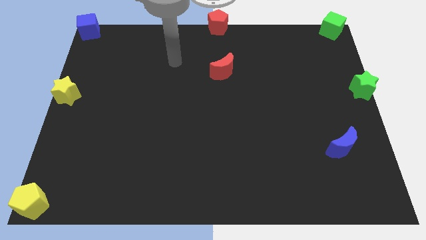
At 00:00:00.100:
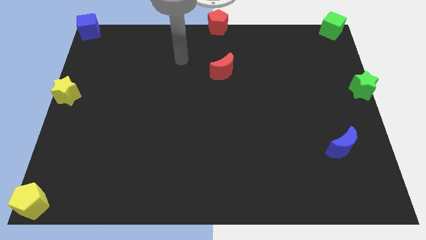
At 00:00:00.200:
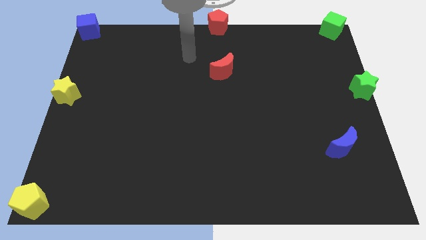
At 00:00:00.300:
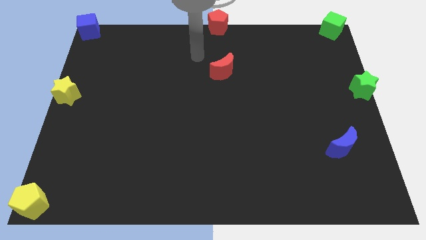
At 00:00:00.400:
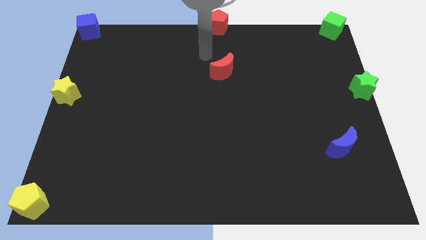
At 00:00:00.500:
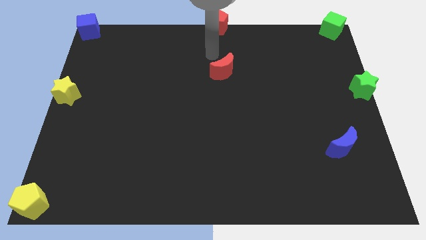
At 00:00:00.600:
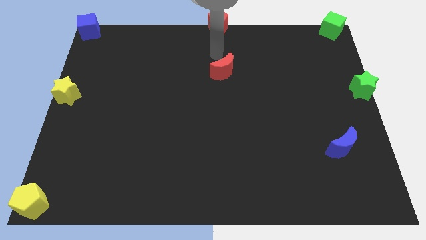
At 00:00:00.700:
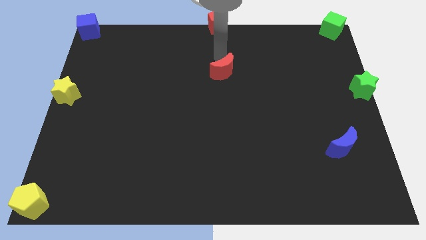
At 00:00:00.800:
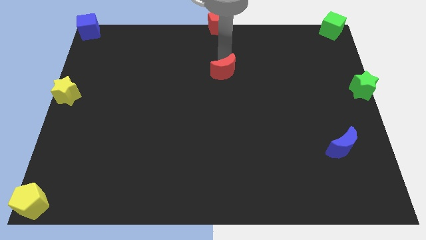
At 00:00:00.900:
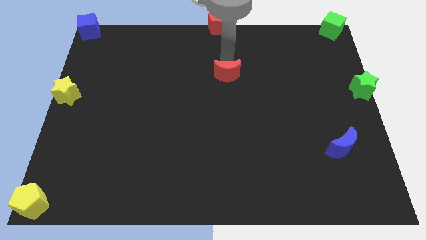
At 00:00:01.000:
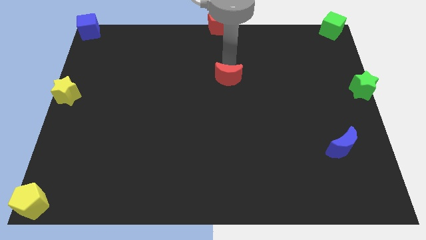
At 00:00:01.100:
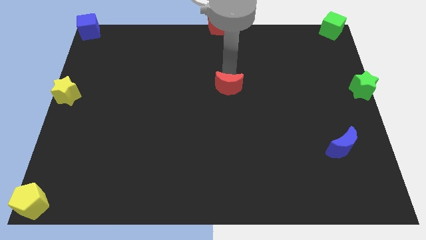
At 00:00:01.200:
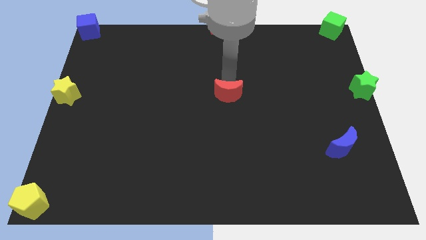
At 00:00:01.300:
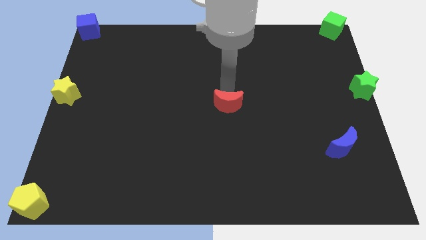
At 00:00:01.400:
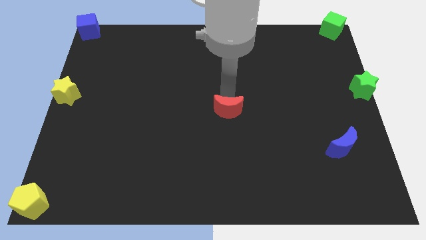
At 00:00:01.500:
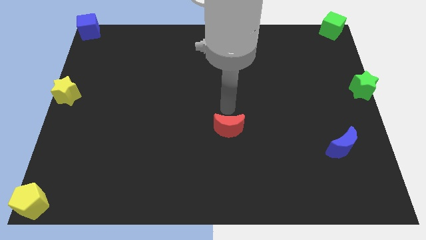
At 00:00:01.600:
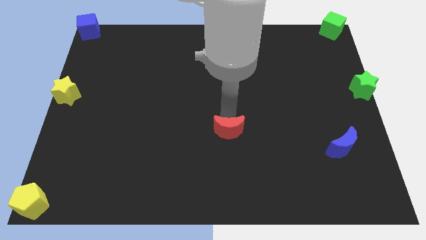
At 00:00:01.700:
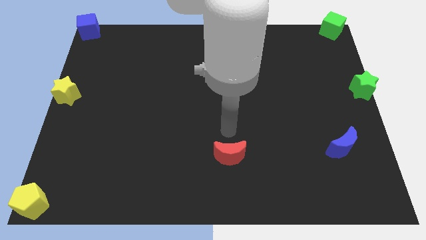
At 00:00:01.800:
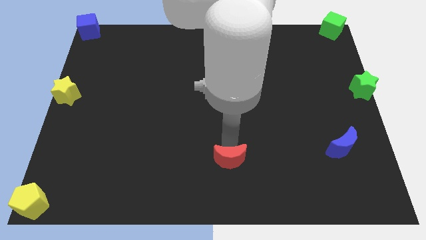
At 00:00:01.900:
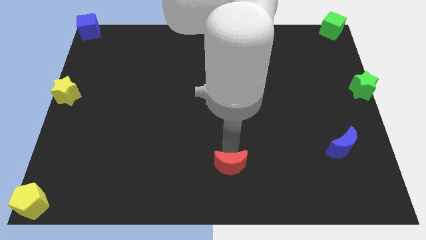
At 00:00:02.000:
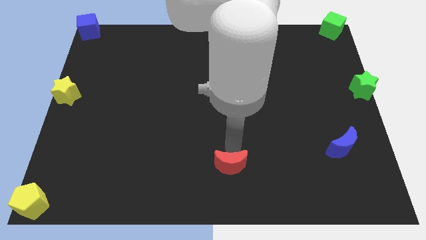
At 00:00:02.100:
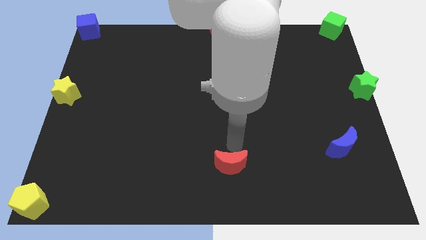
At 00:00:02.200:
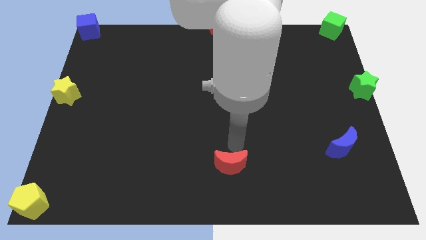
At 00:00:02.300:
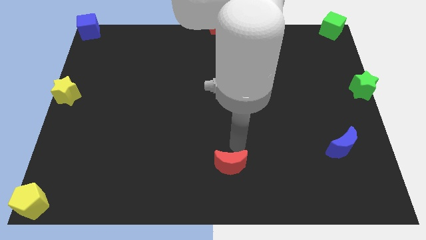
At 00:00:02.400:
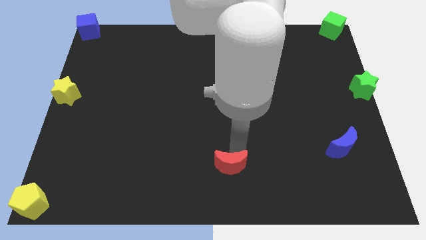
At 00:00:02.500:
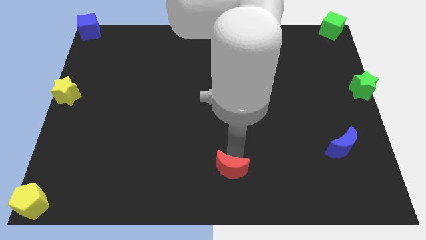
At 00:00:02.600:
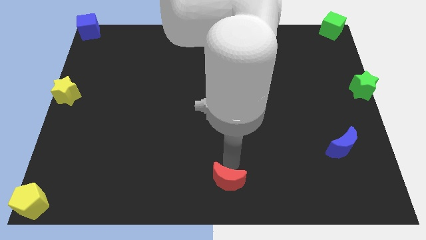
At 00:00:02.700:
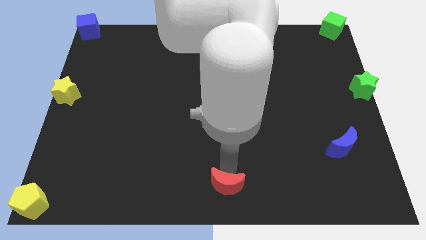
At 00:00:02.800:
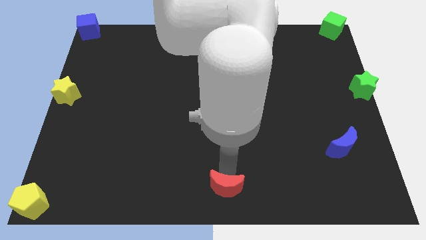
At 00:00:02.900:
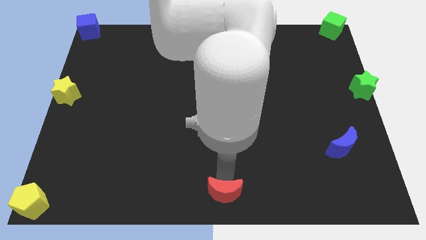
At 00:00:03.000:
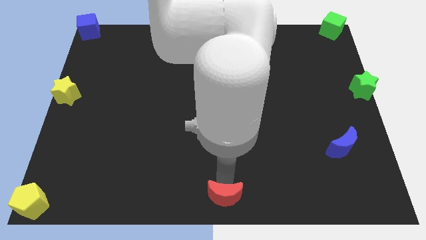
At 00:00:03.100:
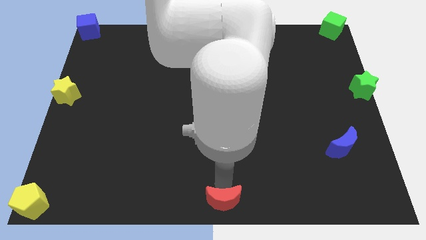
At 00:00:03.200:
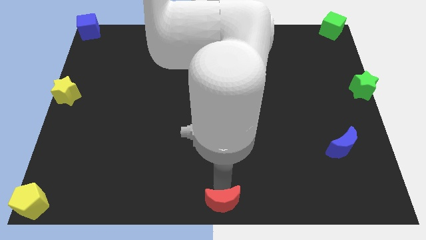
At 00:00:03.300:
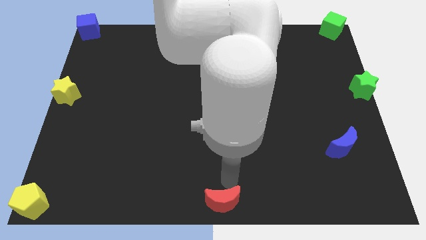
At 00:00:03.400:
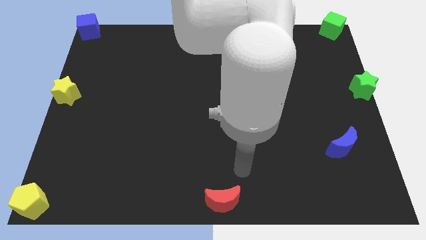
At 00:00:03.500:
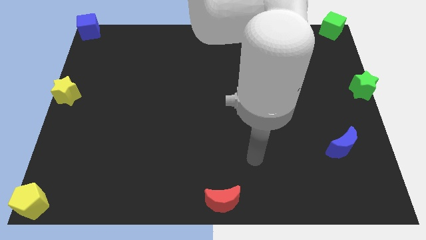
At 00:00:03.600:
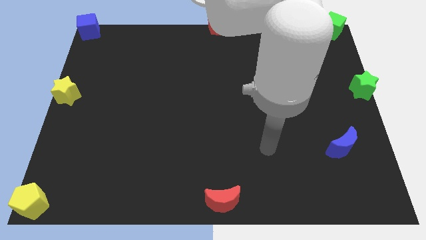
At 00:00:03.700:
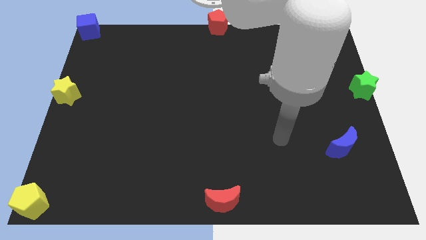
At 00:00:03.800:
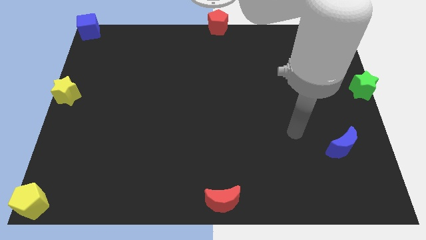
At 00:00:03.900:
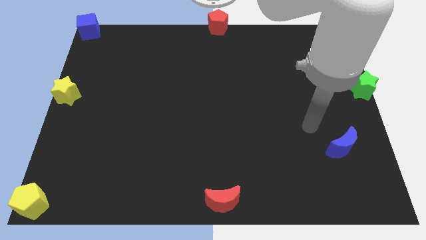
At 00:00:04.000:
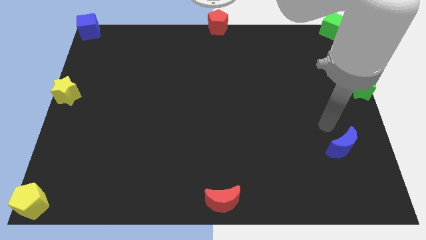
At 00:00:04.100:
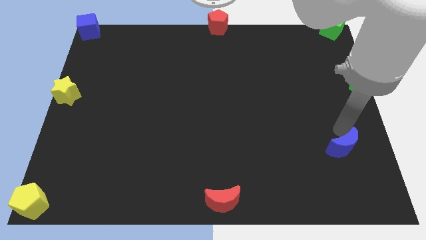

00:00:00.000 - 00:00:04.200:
push the red crescent middle center bottom of the board

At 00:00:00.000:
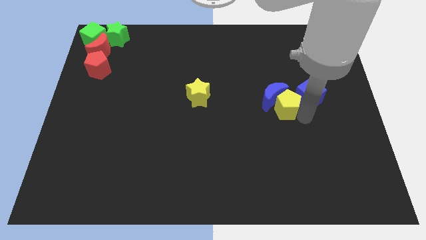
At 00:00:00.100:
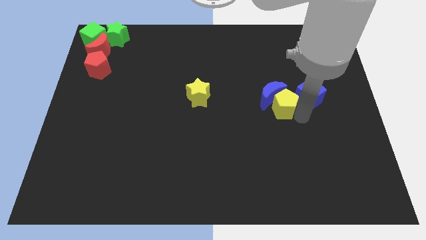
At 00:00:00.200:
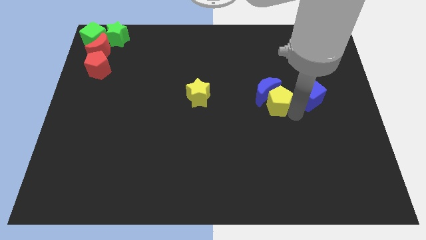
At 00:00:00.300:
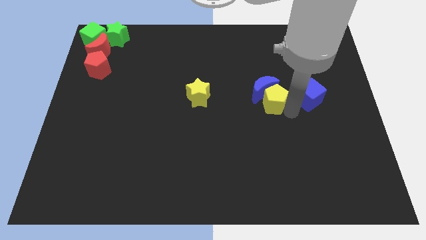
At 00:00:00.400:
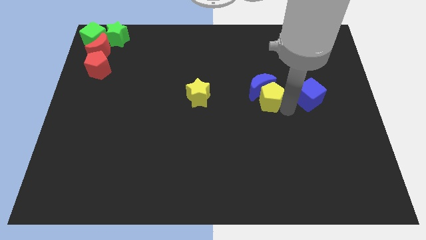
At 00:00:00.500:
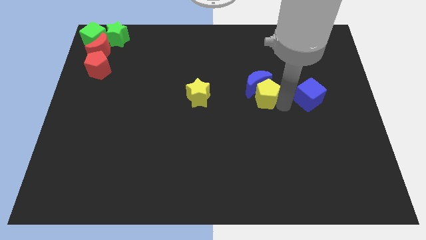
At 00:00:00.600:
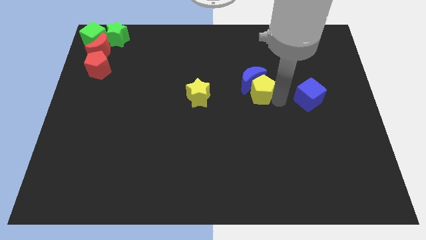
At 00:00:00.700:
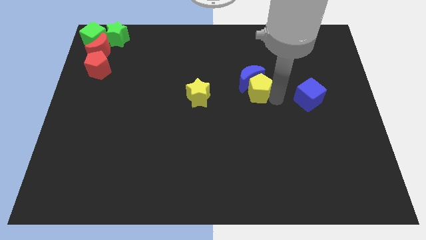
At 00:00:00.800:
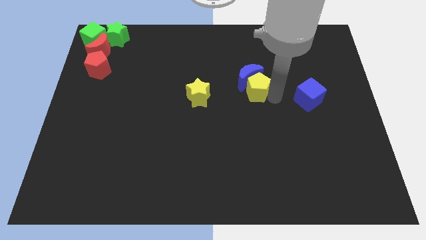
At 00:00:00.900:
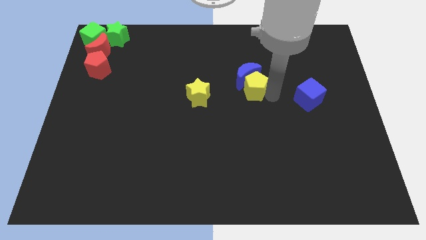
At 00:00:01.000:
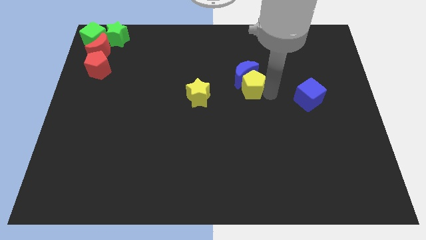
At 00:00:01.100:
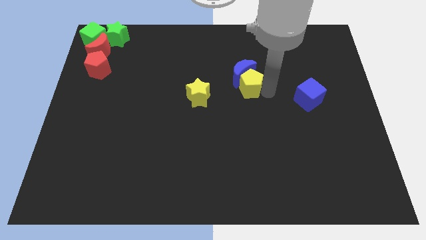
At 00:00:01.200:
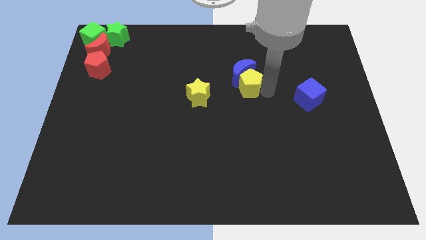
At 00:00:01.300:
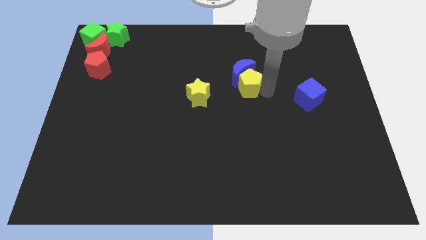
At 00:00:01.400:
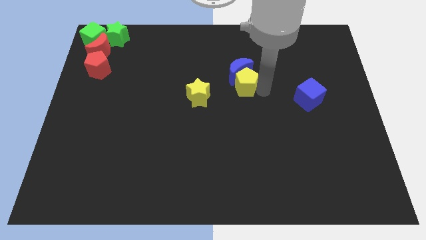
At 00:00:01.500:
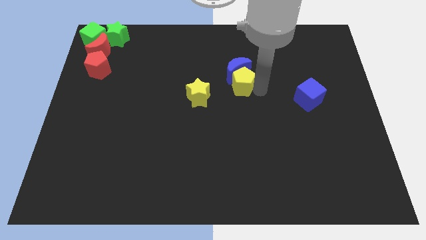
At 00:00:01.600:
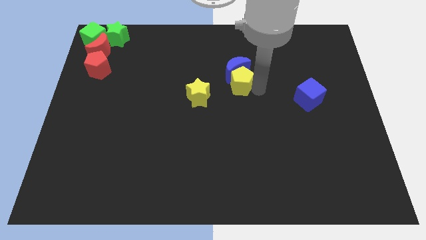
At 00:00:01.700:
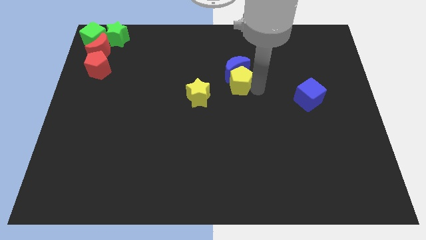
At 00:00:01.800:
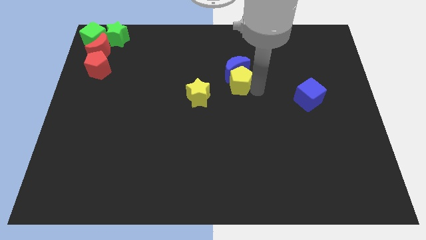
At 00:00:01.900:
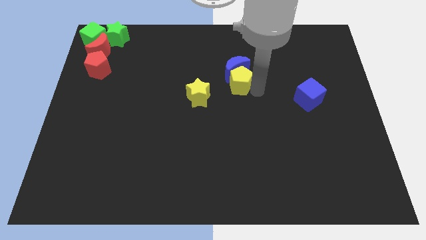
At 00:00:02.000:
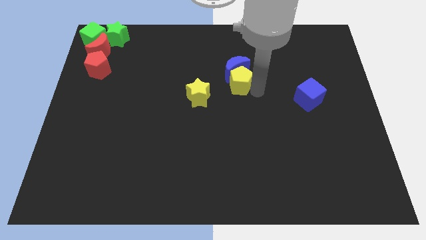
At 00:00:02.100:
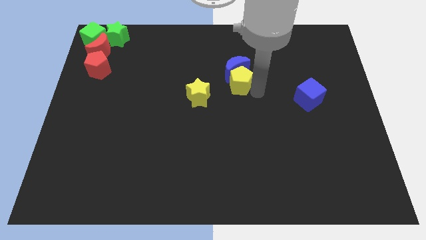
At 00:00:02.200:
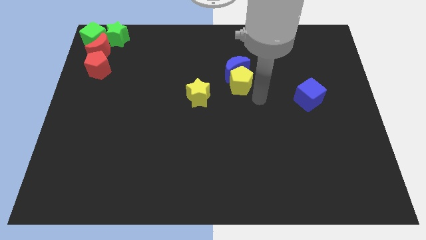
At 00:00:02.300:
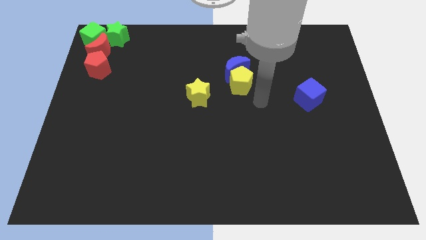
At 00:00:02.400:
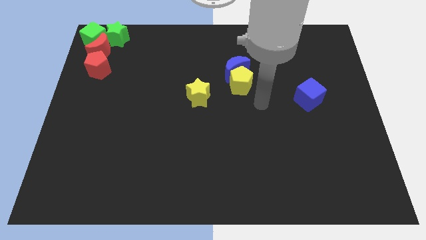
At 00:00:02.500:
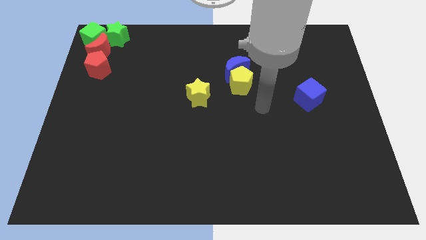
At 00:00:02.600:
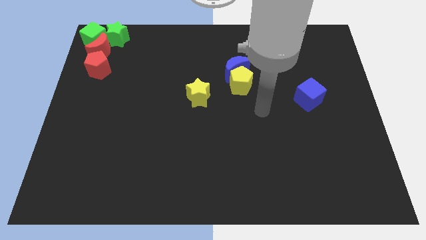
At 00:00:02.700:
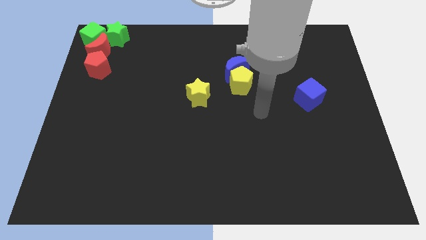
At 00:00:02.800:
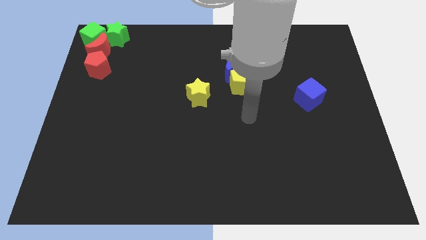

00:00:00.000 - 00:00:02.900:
push the yellow pentagon and blue crescent at the top right side of yellow star

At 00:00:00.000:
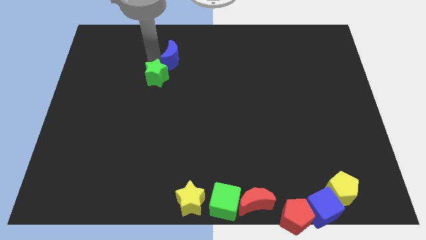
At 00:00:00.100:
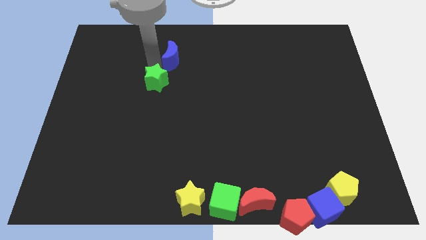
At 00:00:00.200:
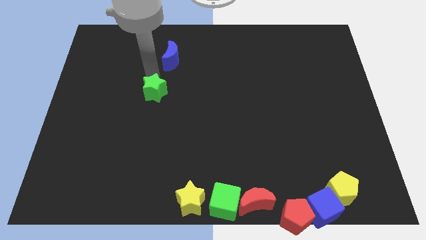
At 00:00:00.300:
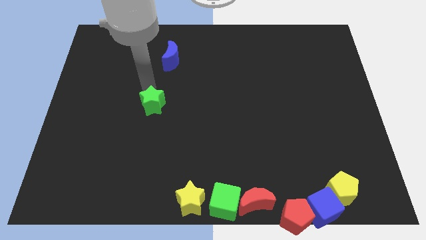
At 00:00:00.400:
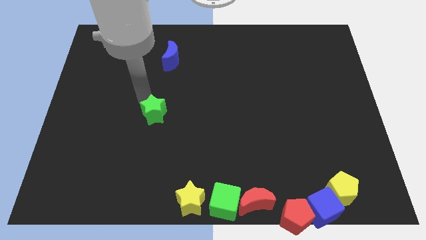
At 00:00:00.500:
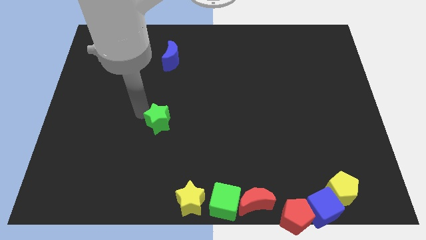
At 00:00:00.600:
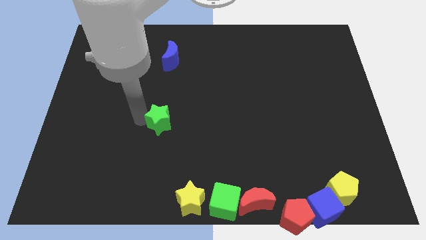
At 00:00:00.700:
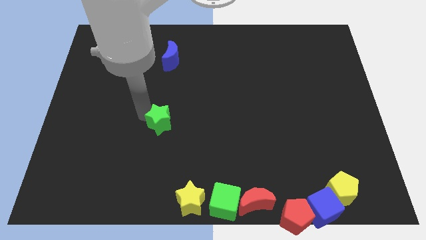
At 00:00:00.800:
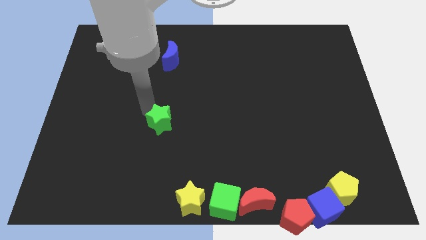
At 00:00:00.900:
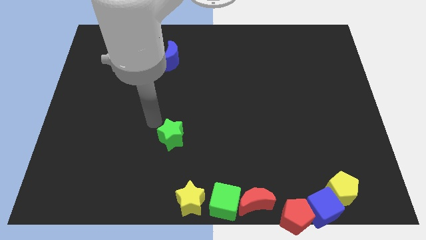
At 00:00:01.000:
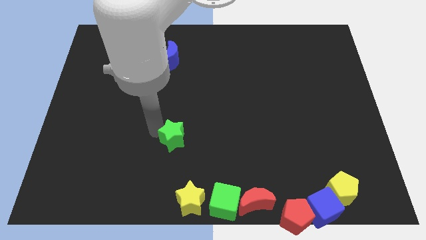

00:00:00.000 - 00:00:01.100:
move the green star towards the bottom side of the board

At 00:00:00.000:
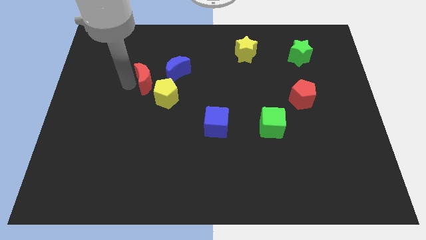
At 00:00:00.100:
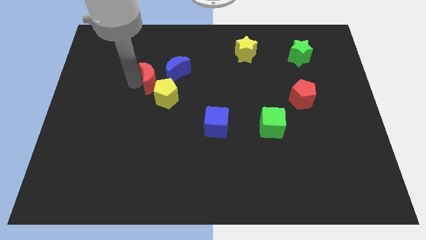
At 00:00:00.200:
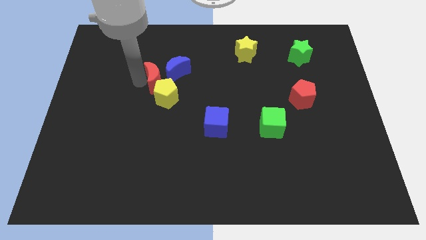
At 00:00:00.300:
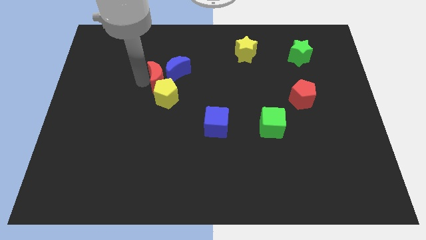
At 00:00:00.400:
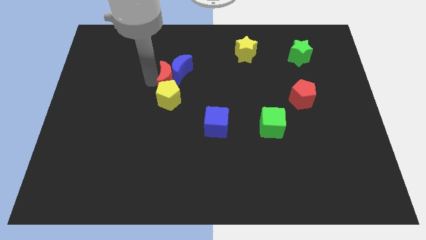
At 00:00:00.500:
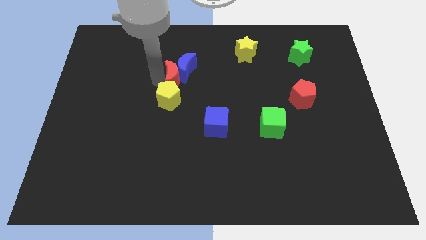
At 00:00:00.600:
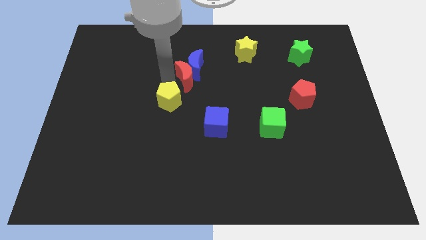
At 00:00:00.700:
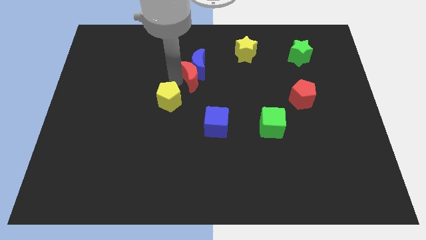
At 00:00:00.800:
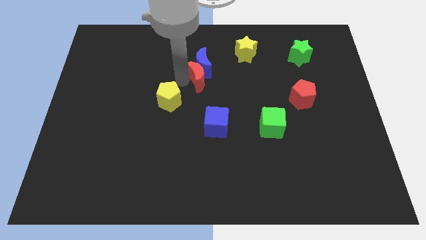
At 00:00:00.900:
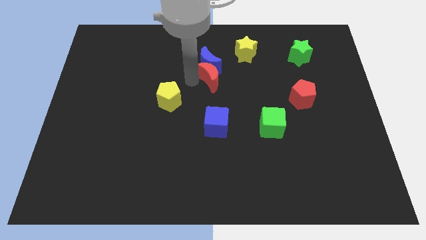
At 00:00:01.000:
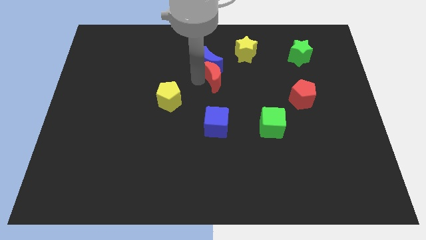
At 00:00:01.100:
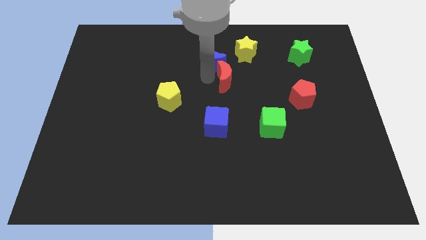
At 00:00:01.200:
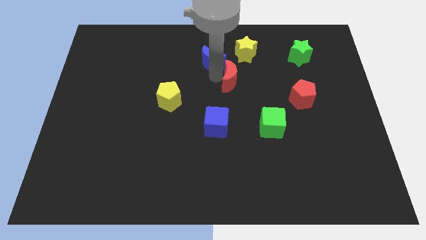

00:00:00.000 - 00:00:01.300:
push the red moon into the blue moon
